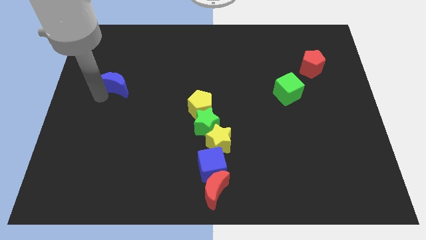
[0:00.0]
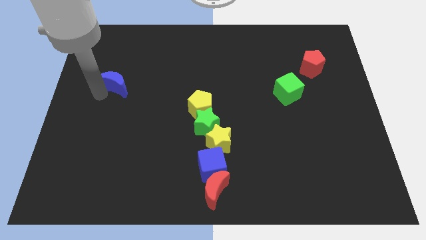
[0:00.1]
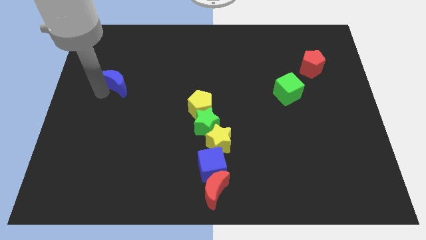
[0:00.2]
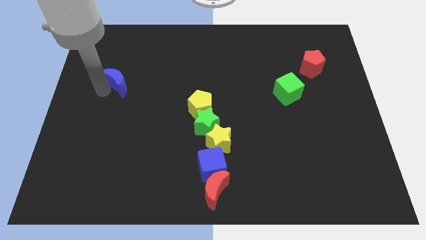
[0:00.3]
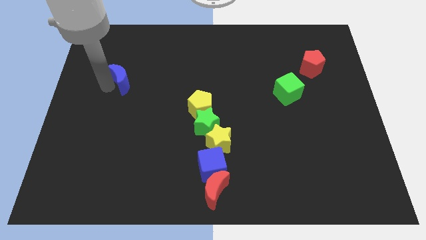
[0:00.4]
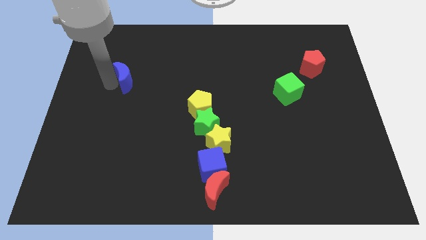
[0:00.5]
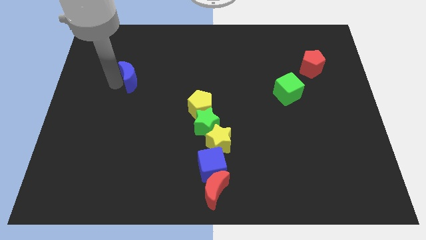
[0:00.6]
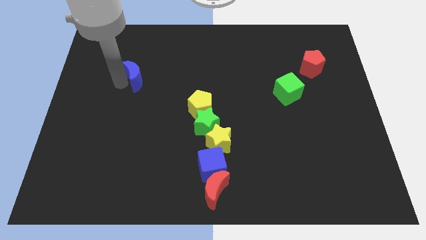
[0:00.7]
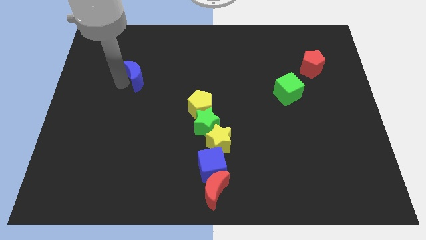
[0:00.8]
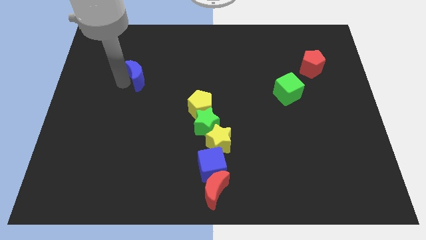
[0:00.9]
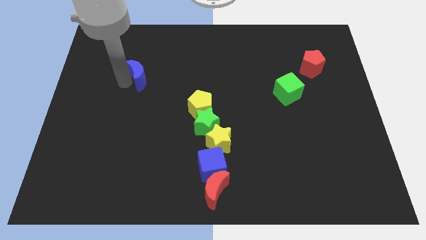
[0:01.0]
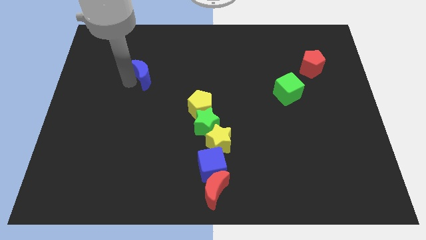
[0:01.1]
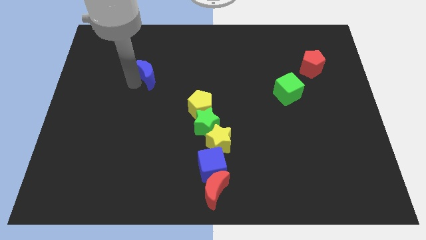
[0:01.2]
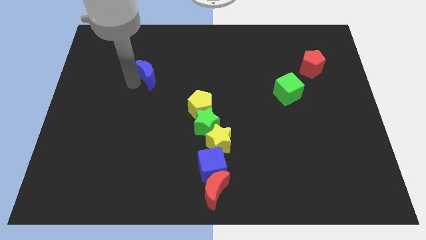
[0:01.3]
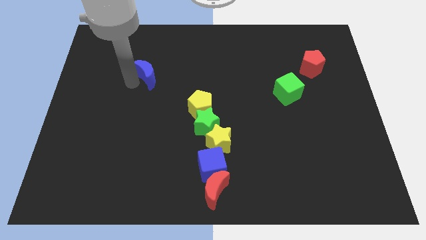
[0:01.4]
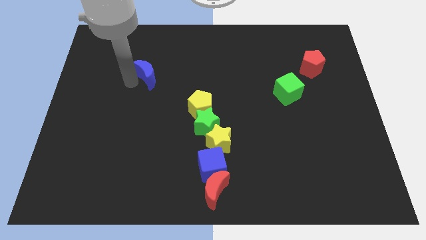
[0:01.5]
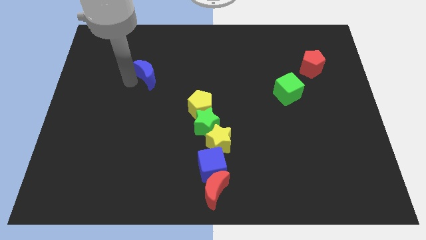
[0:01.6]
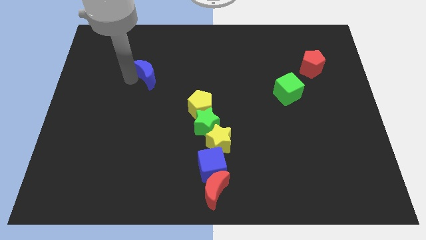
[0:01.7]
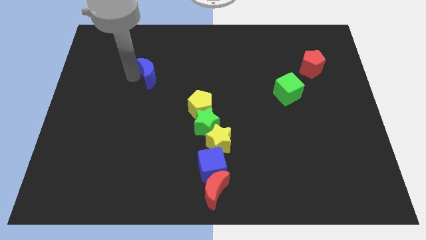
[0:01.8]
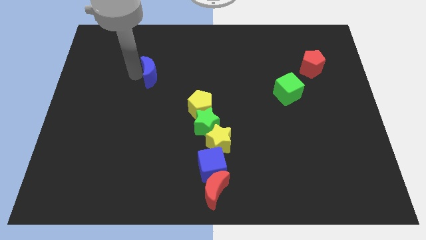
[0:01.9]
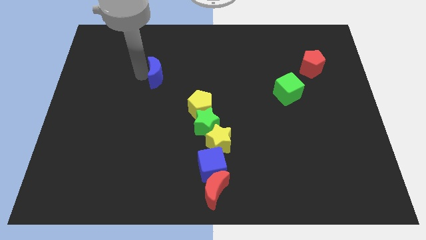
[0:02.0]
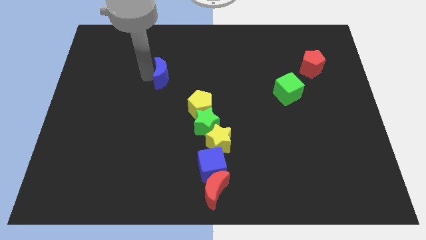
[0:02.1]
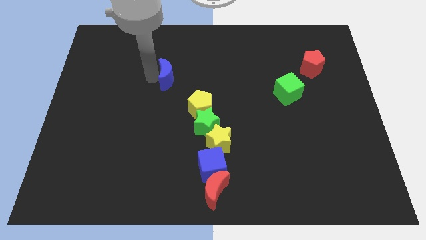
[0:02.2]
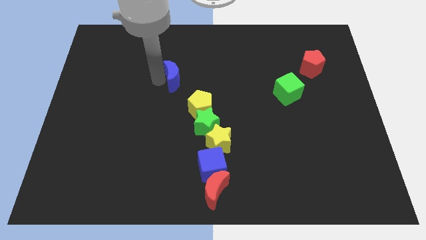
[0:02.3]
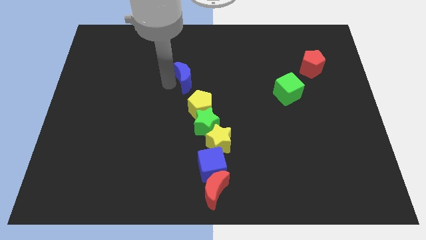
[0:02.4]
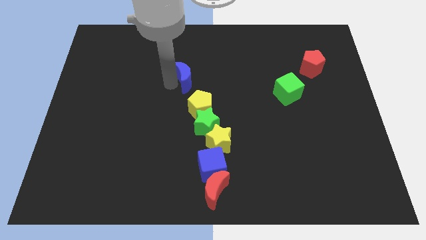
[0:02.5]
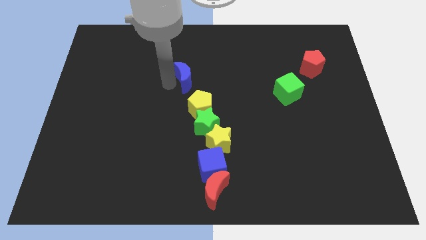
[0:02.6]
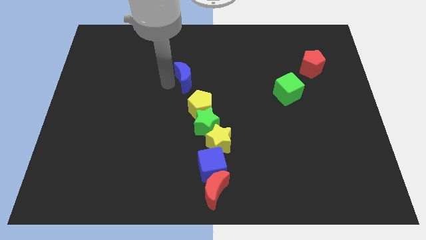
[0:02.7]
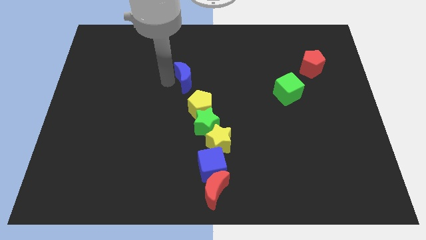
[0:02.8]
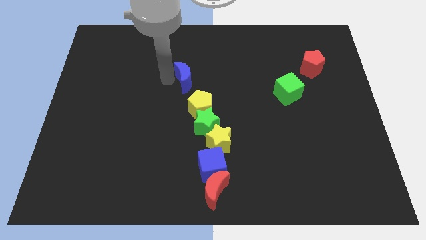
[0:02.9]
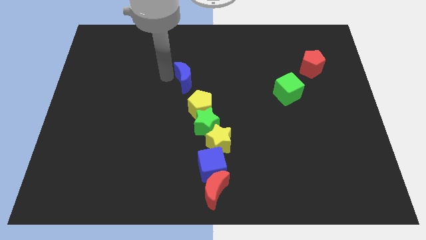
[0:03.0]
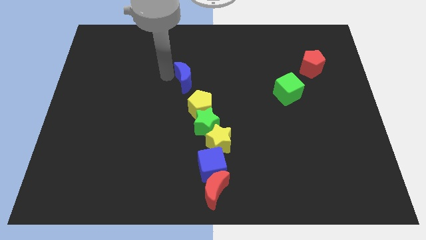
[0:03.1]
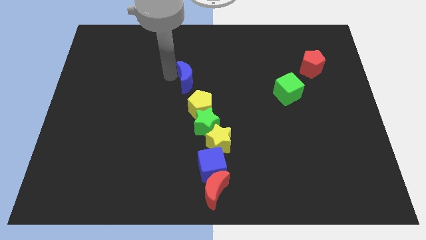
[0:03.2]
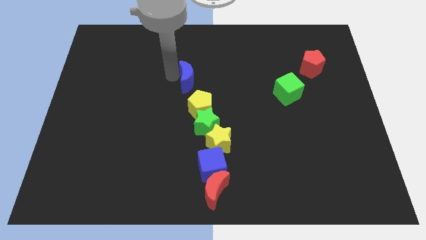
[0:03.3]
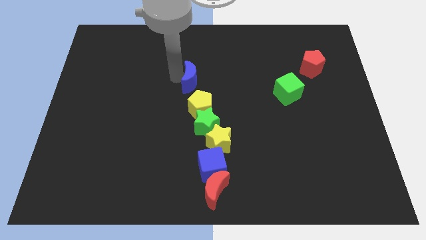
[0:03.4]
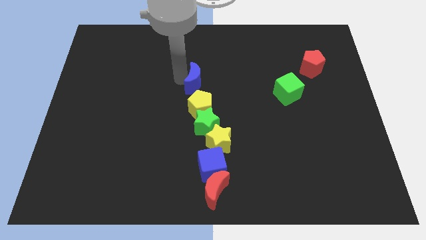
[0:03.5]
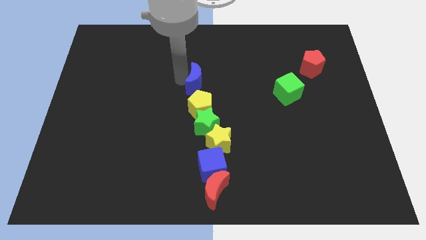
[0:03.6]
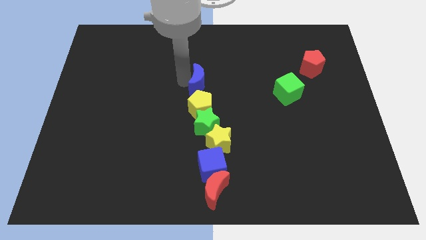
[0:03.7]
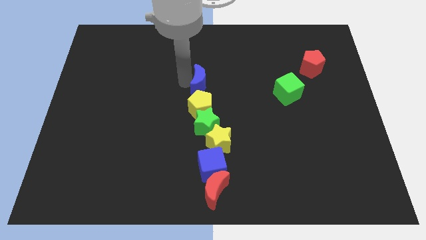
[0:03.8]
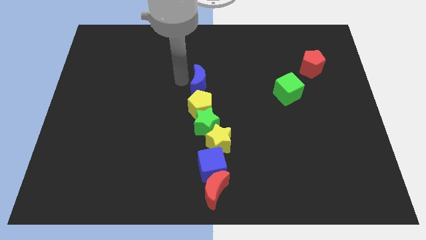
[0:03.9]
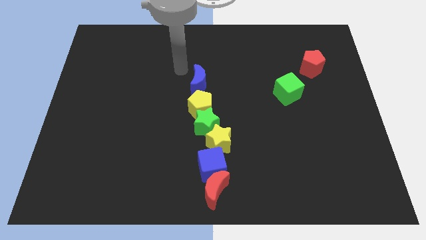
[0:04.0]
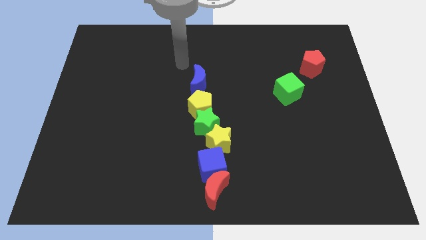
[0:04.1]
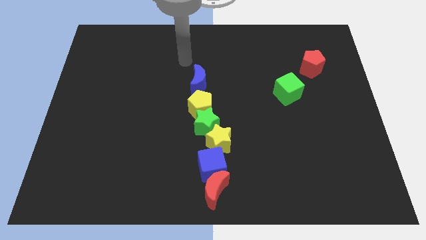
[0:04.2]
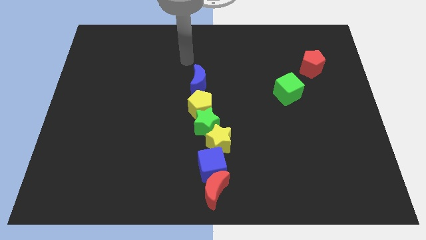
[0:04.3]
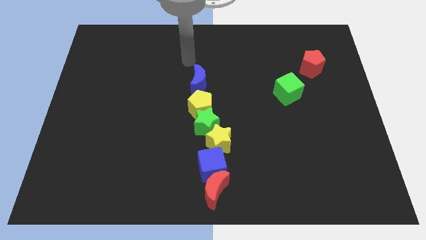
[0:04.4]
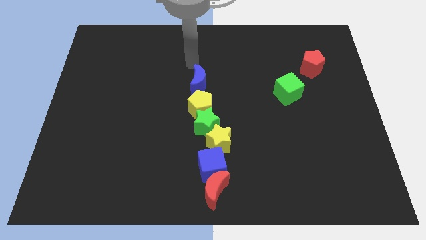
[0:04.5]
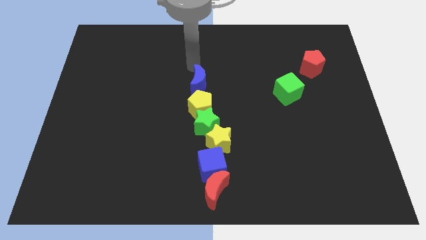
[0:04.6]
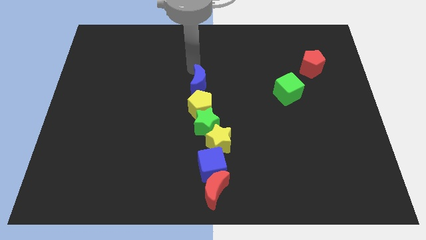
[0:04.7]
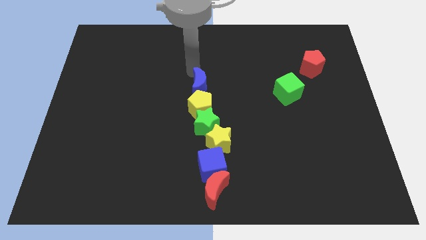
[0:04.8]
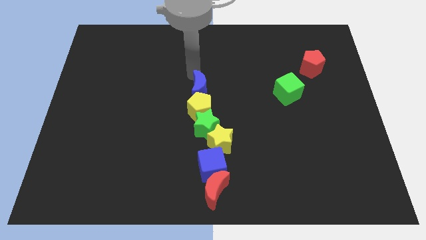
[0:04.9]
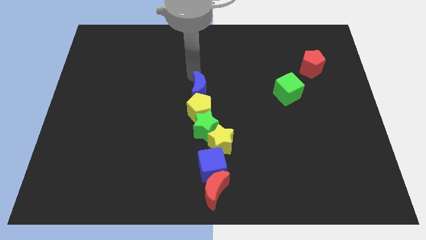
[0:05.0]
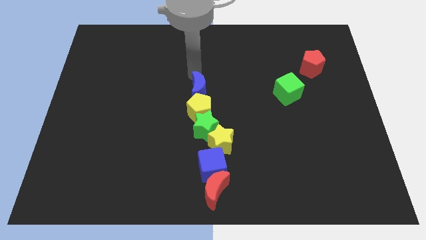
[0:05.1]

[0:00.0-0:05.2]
move the blue crescent to the top of the yellow pentagon

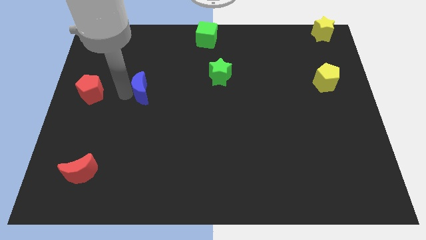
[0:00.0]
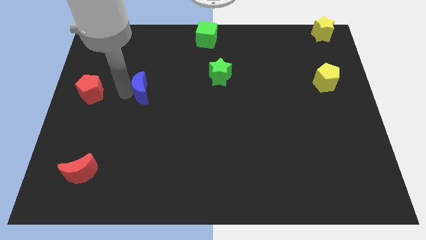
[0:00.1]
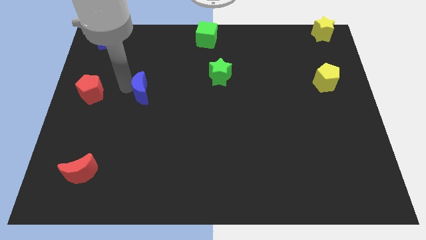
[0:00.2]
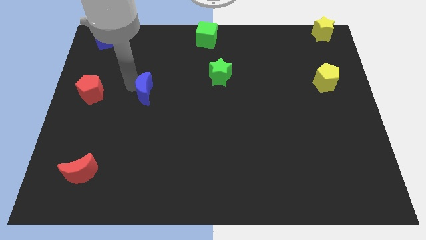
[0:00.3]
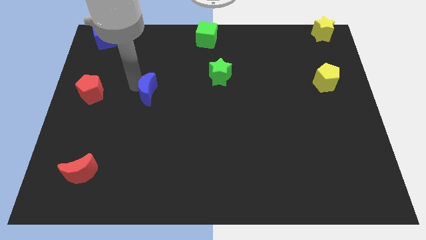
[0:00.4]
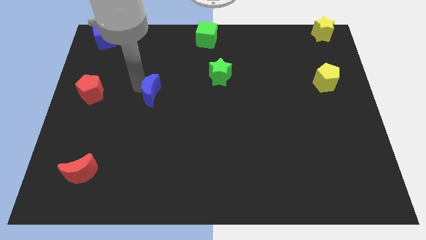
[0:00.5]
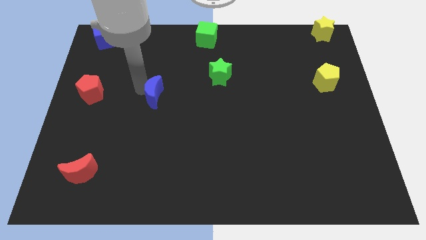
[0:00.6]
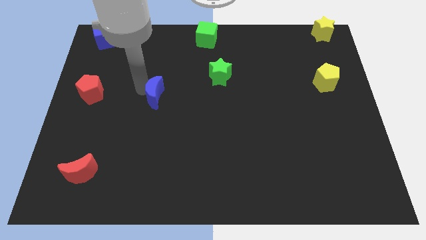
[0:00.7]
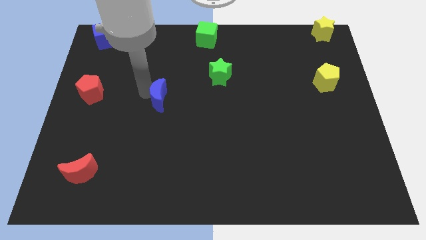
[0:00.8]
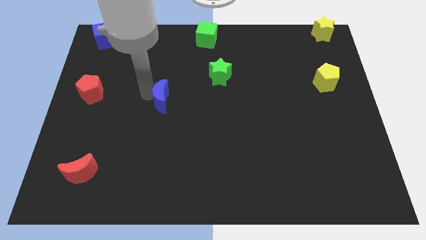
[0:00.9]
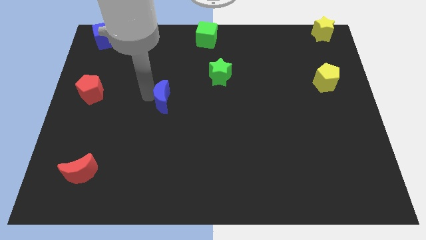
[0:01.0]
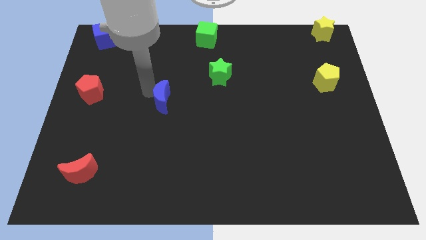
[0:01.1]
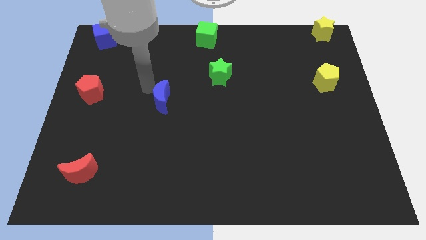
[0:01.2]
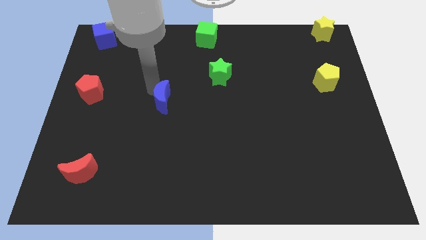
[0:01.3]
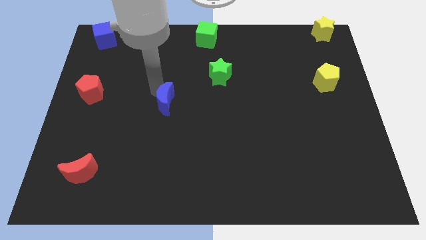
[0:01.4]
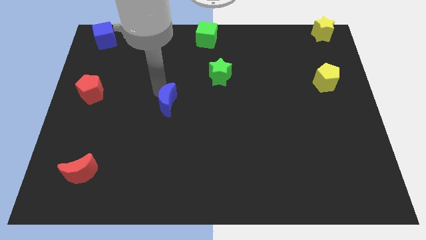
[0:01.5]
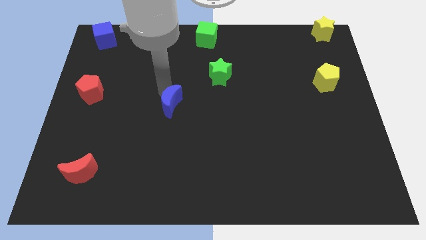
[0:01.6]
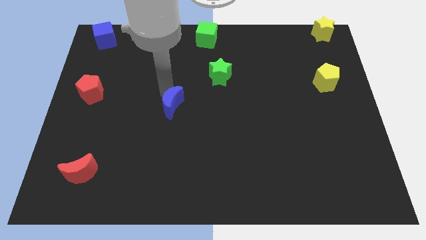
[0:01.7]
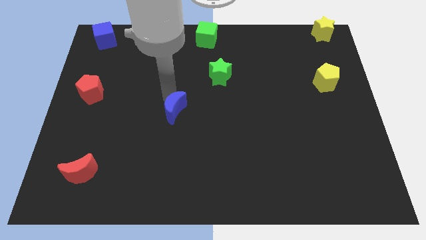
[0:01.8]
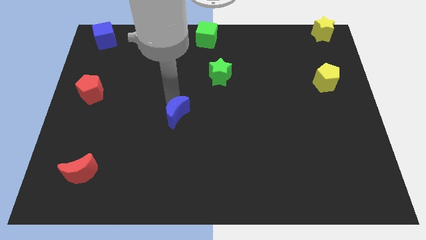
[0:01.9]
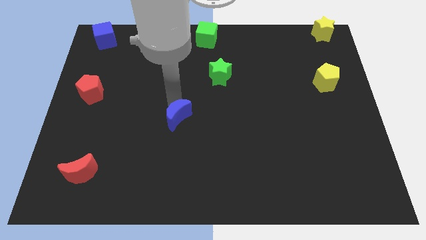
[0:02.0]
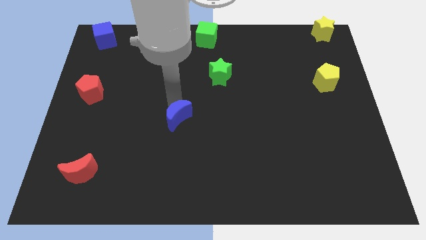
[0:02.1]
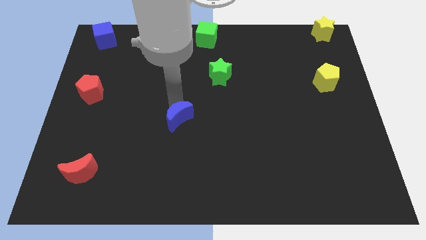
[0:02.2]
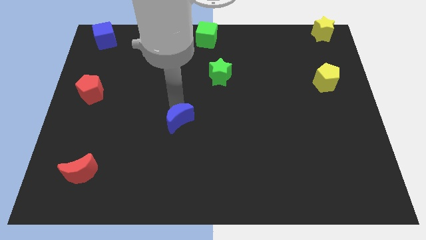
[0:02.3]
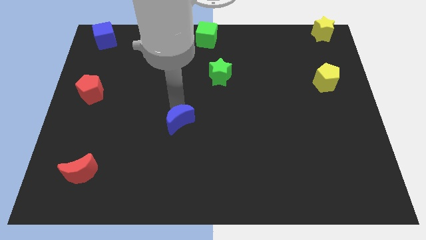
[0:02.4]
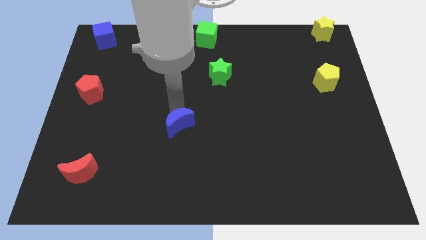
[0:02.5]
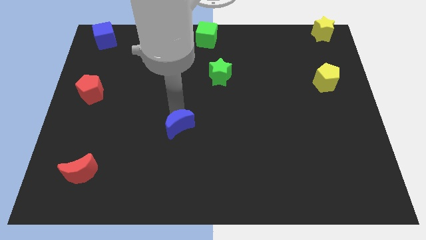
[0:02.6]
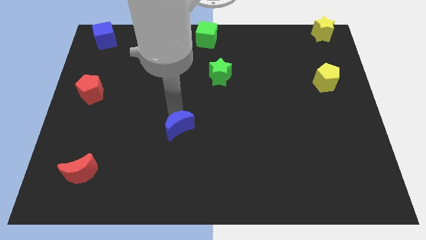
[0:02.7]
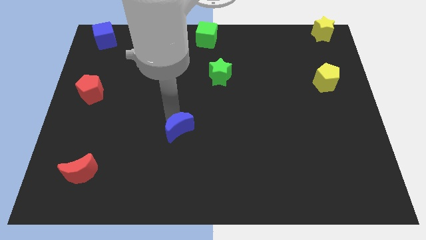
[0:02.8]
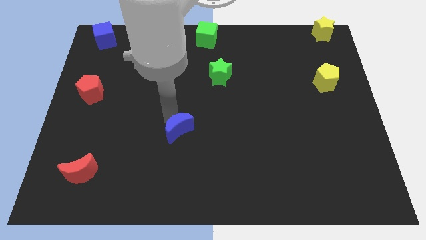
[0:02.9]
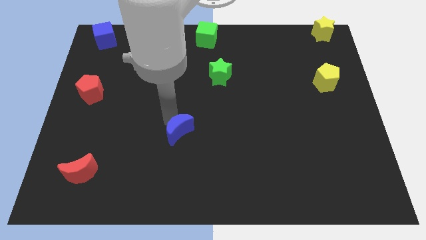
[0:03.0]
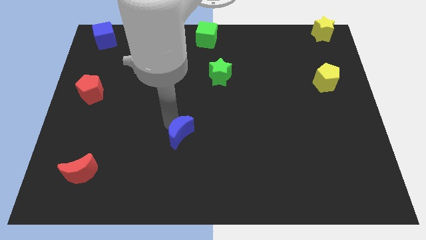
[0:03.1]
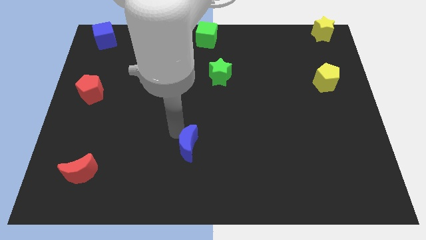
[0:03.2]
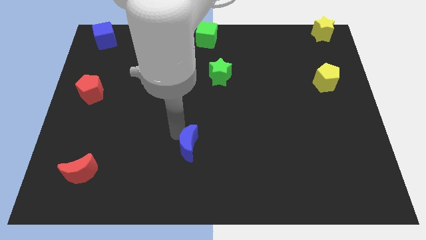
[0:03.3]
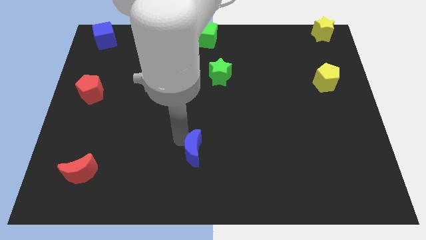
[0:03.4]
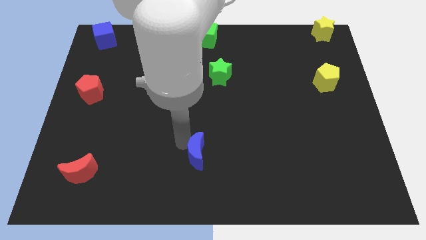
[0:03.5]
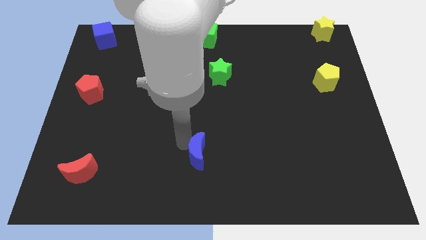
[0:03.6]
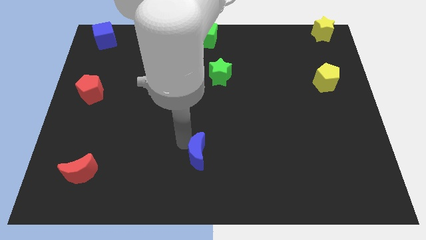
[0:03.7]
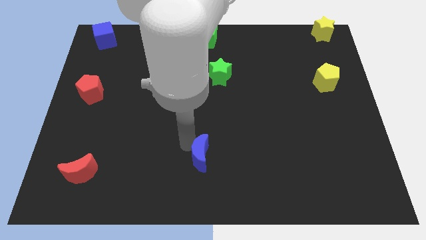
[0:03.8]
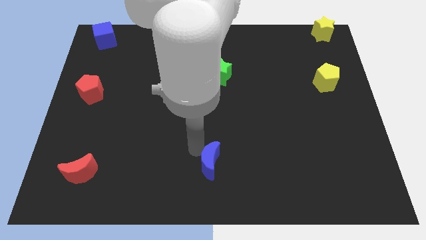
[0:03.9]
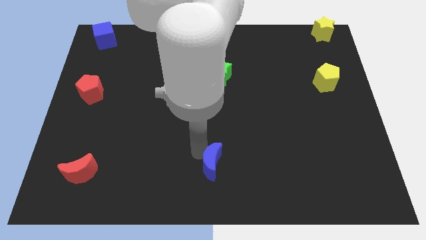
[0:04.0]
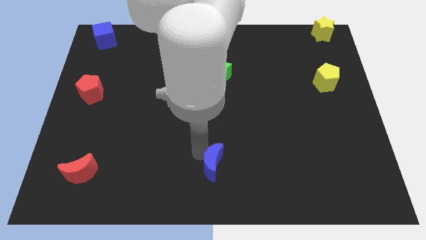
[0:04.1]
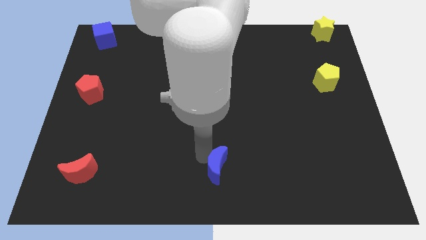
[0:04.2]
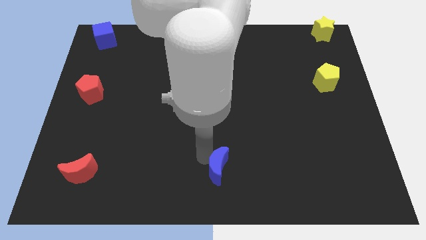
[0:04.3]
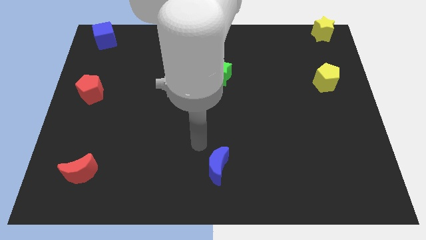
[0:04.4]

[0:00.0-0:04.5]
move the blue crescent towards the bottom center
